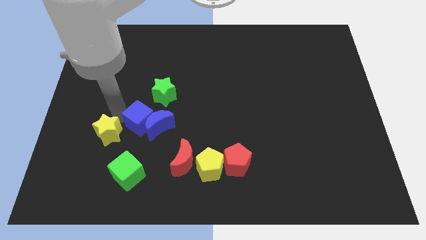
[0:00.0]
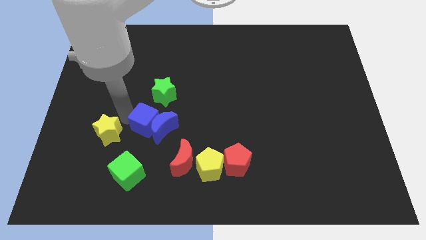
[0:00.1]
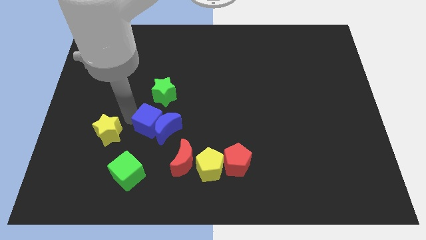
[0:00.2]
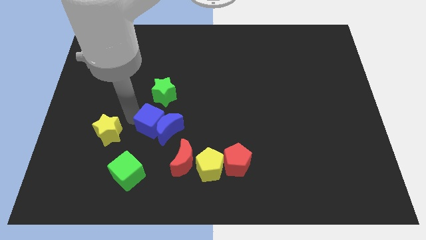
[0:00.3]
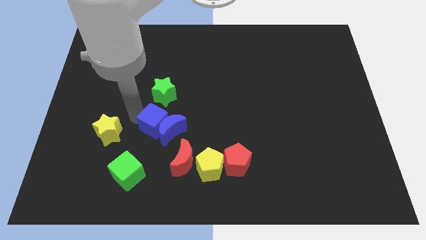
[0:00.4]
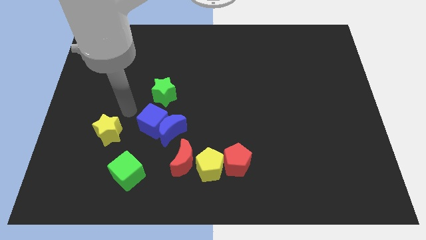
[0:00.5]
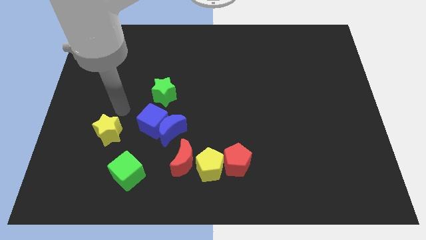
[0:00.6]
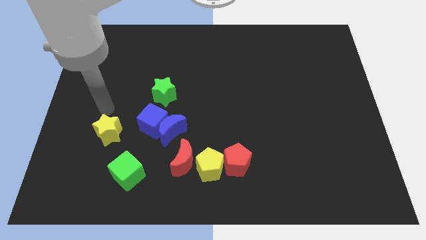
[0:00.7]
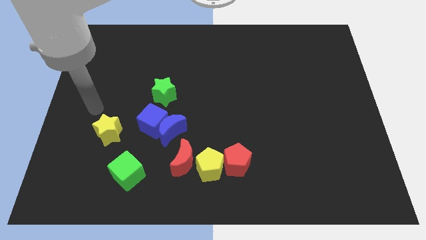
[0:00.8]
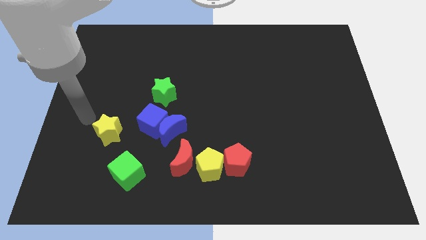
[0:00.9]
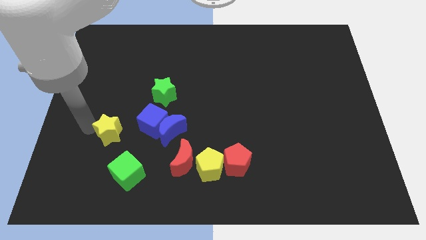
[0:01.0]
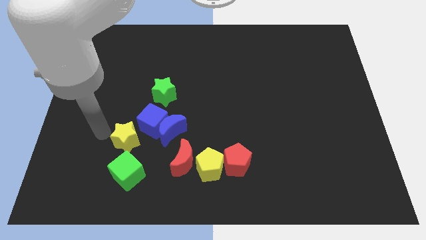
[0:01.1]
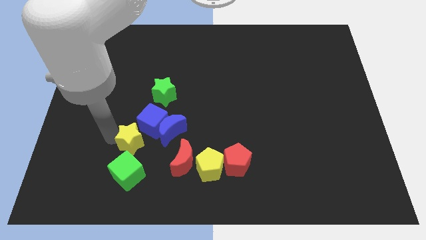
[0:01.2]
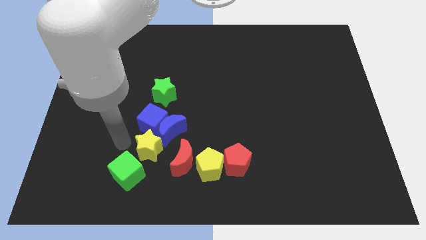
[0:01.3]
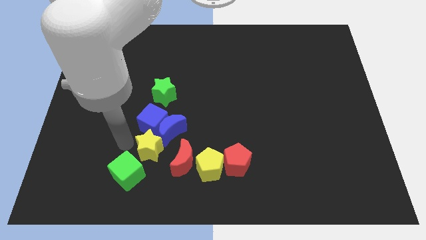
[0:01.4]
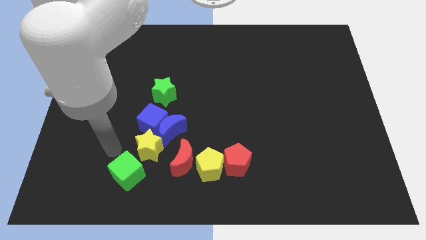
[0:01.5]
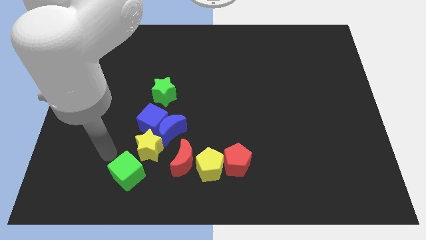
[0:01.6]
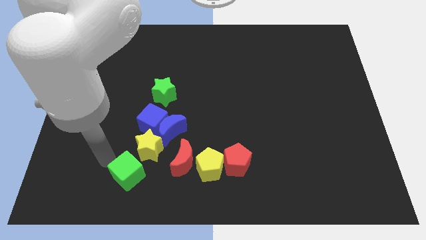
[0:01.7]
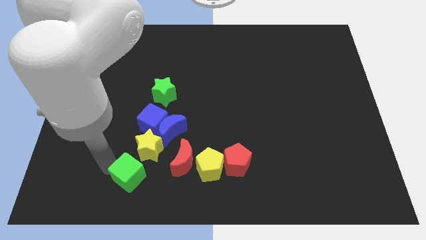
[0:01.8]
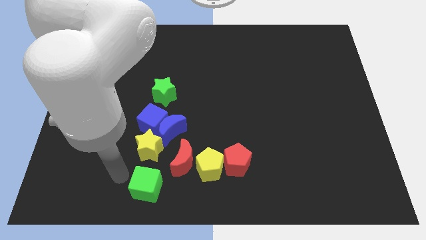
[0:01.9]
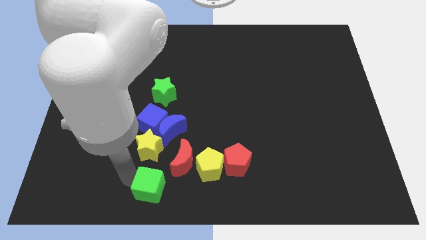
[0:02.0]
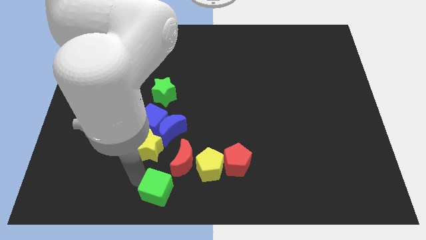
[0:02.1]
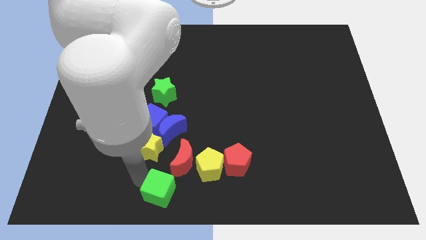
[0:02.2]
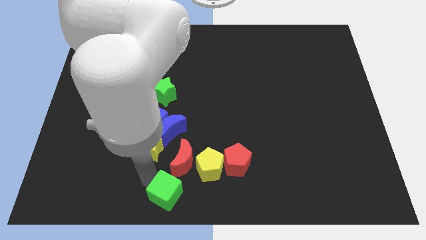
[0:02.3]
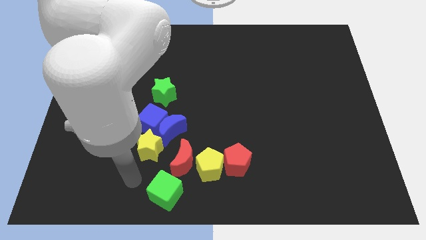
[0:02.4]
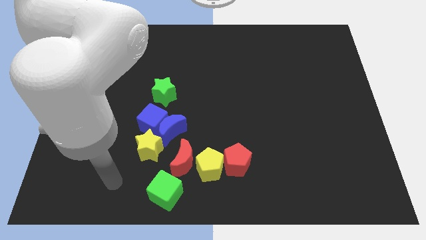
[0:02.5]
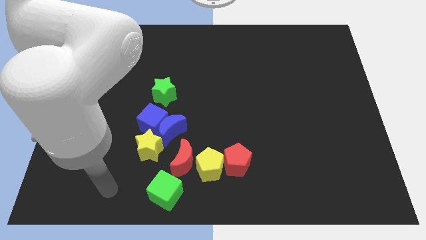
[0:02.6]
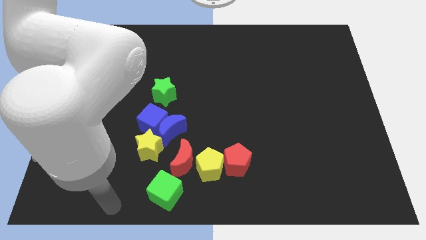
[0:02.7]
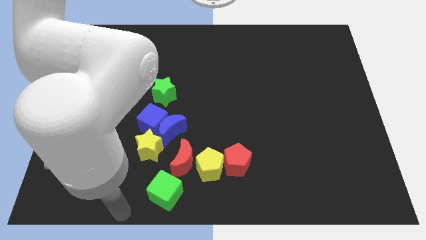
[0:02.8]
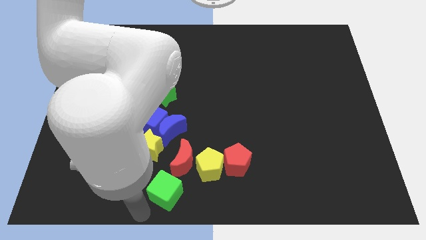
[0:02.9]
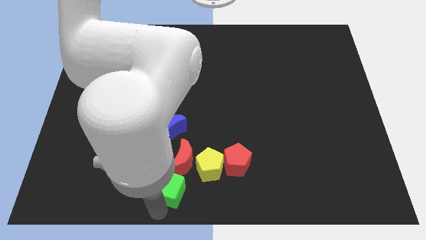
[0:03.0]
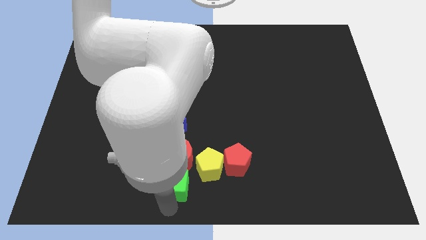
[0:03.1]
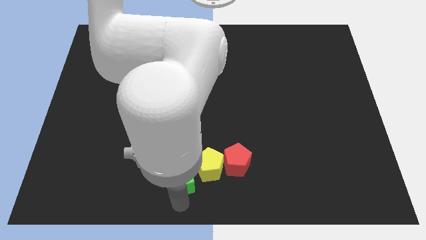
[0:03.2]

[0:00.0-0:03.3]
push the yellow star and green cube near to the red moon

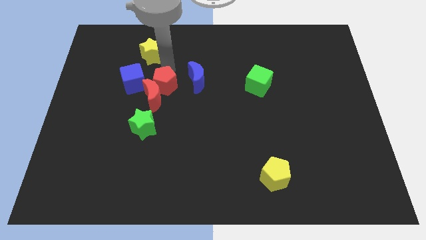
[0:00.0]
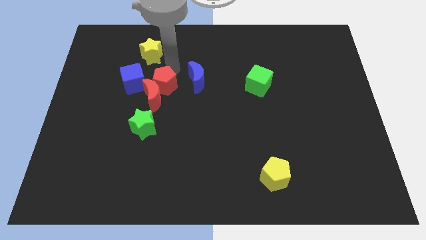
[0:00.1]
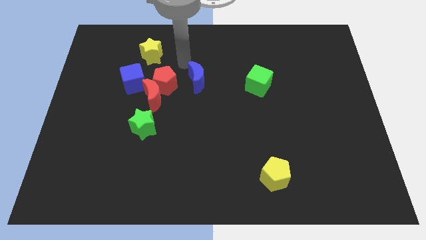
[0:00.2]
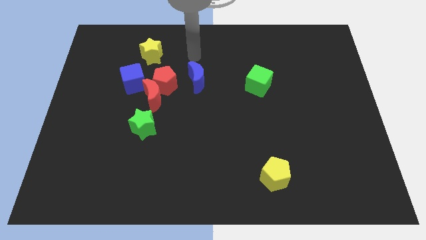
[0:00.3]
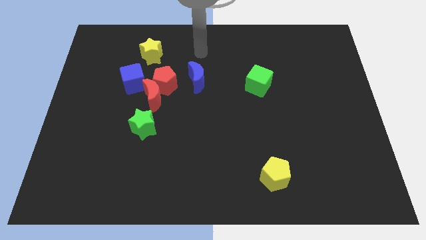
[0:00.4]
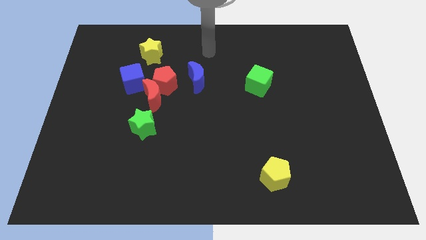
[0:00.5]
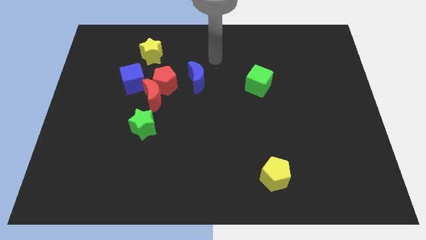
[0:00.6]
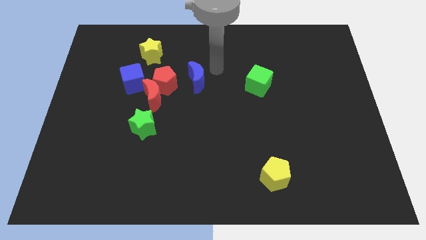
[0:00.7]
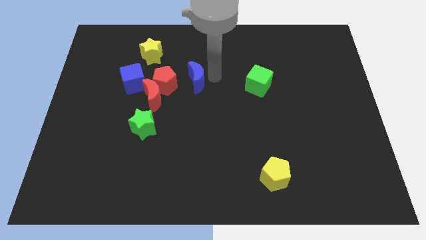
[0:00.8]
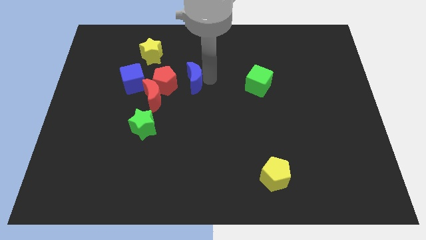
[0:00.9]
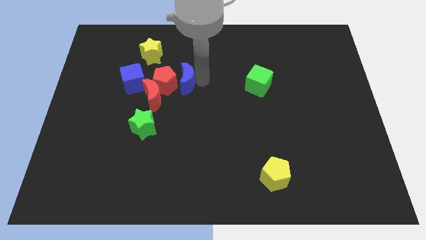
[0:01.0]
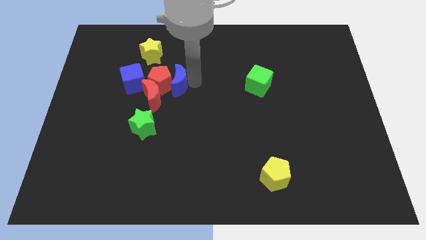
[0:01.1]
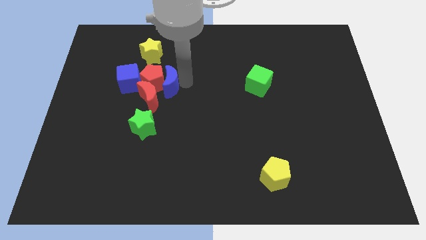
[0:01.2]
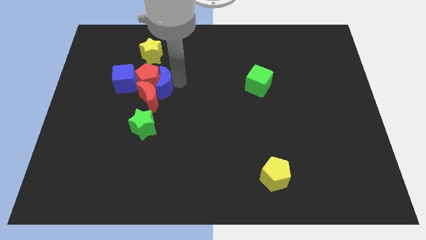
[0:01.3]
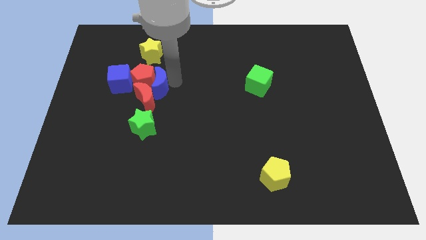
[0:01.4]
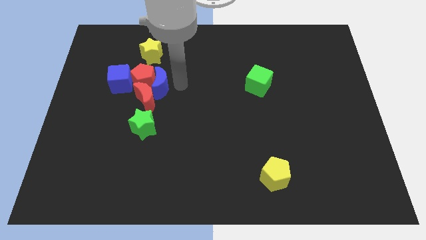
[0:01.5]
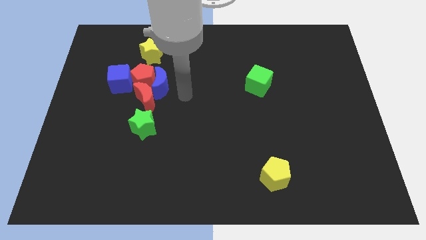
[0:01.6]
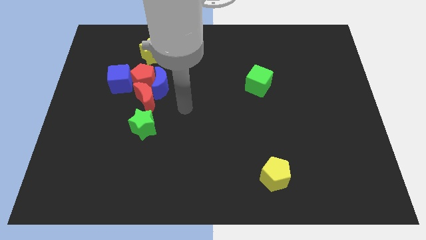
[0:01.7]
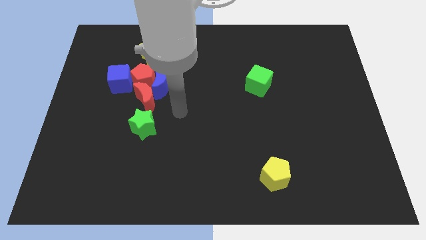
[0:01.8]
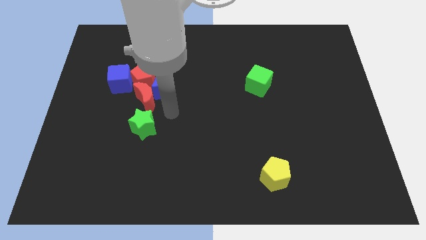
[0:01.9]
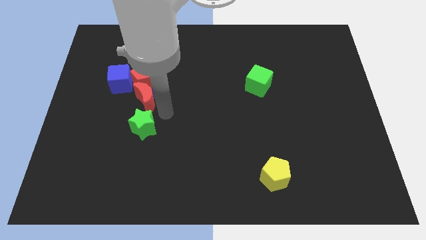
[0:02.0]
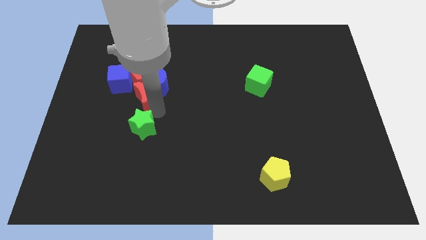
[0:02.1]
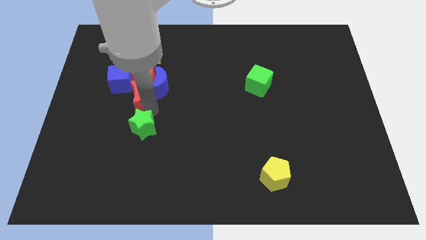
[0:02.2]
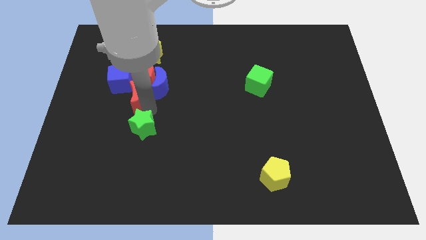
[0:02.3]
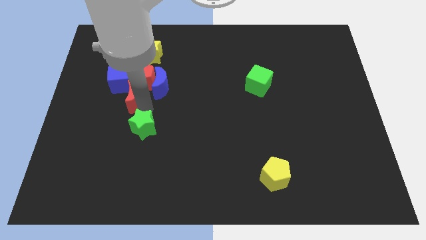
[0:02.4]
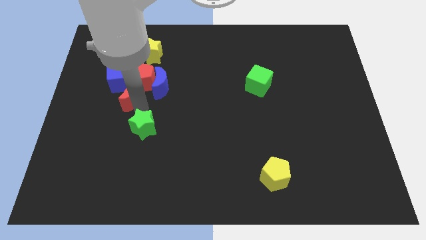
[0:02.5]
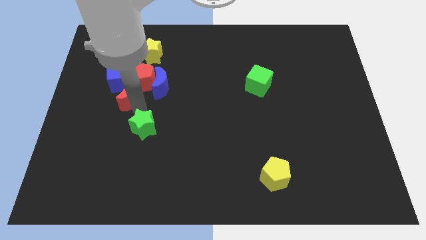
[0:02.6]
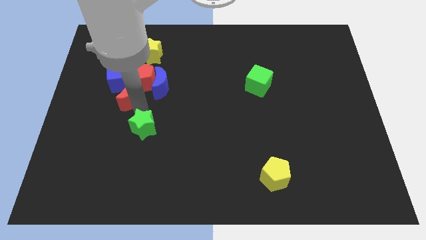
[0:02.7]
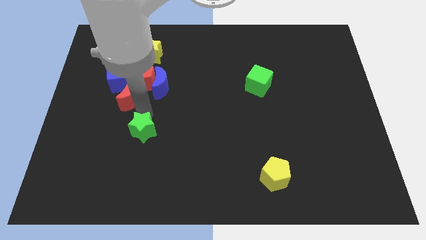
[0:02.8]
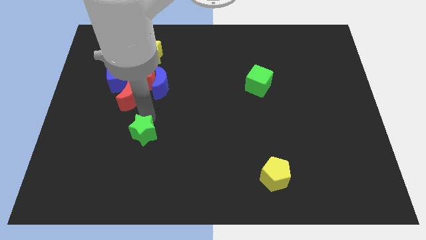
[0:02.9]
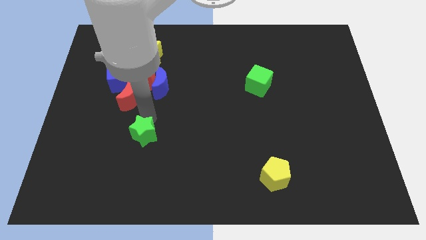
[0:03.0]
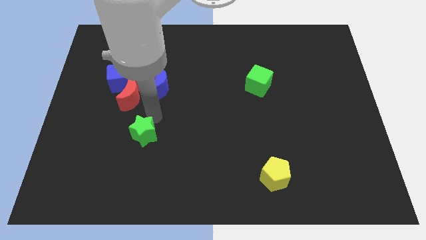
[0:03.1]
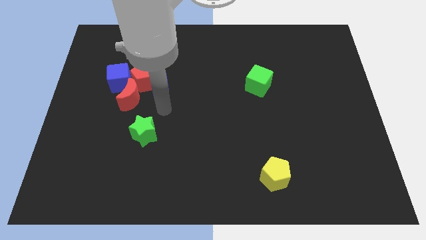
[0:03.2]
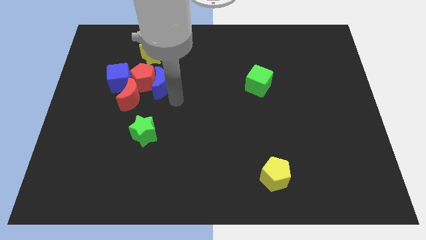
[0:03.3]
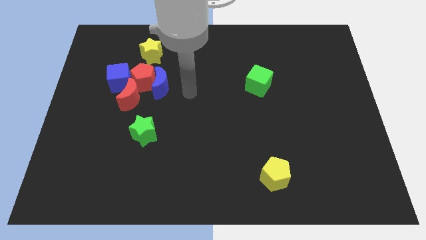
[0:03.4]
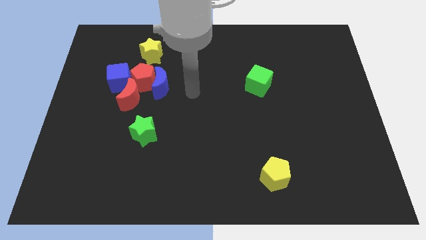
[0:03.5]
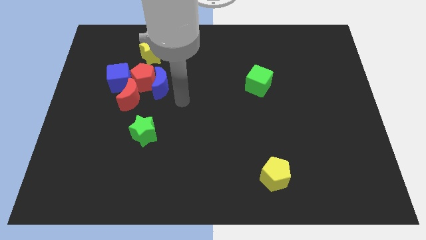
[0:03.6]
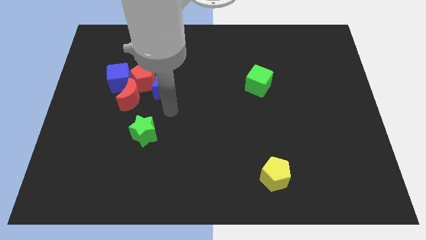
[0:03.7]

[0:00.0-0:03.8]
separate the green star and red moon

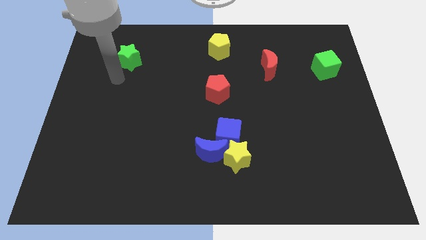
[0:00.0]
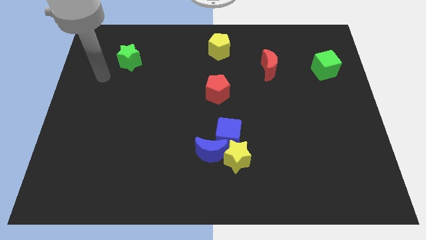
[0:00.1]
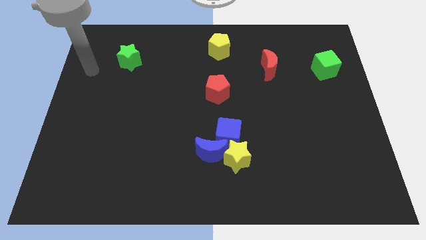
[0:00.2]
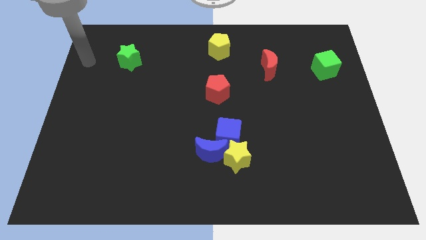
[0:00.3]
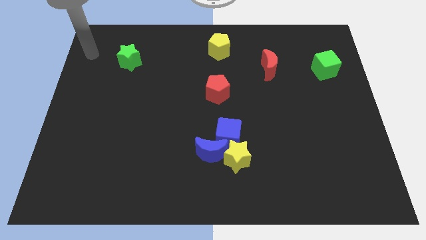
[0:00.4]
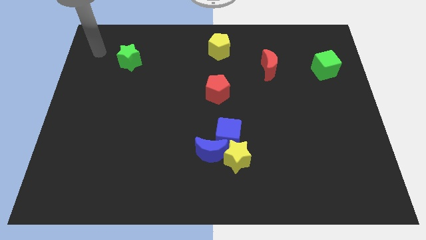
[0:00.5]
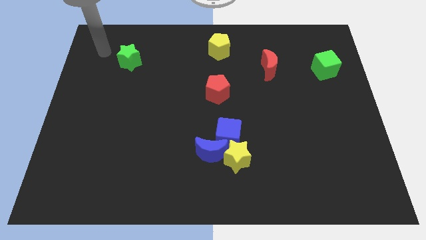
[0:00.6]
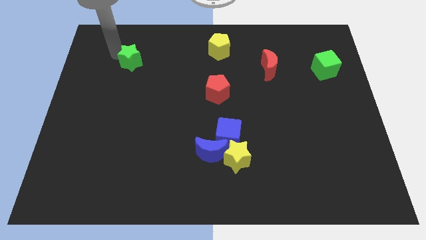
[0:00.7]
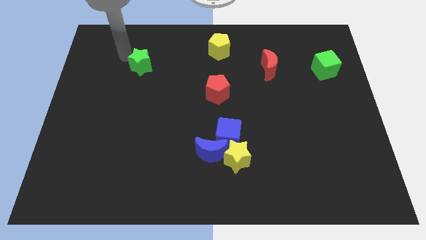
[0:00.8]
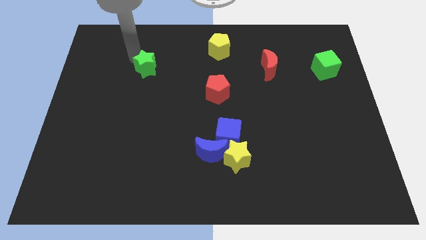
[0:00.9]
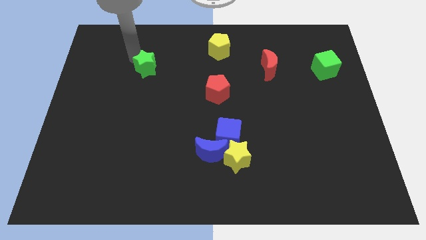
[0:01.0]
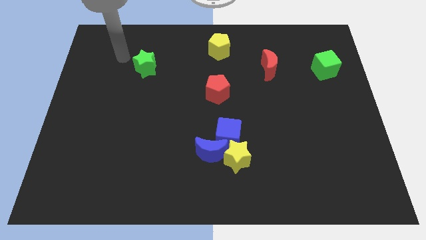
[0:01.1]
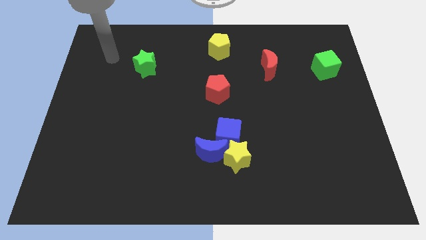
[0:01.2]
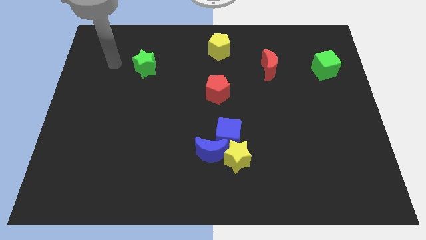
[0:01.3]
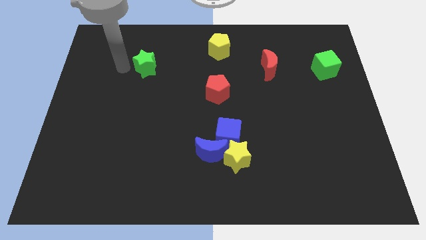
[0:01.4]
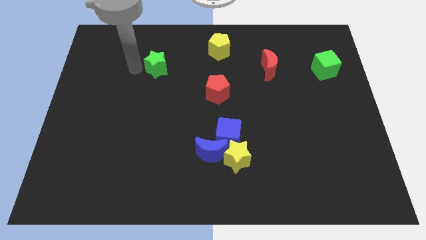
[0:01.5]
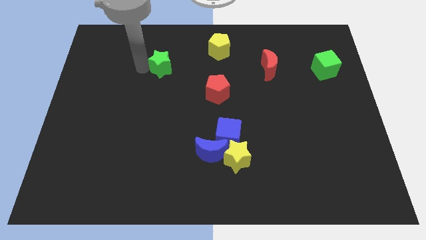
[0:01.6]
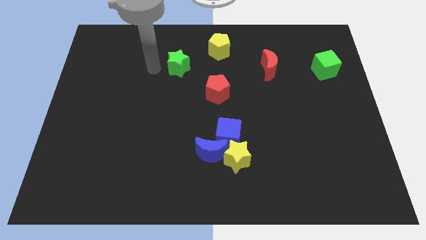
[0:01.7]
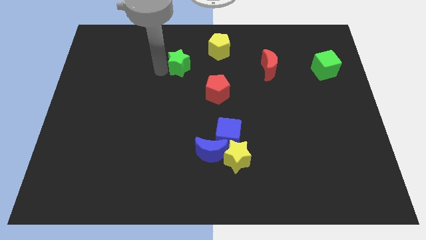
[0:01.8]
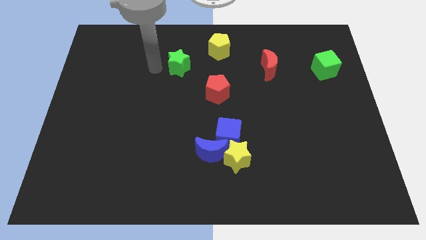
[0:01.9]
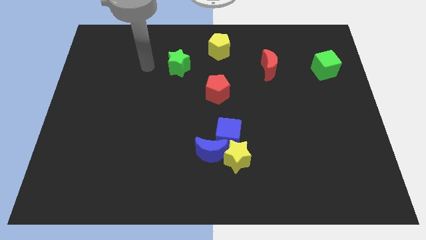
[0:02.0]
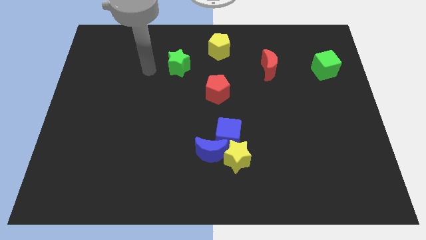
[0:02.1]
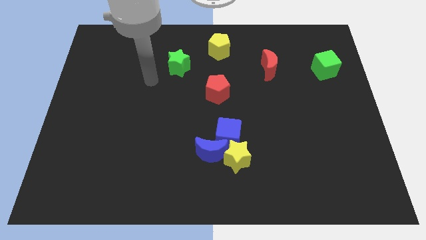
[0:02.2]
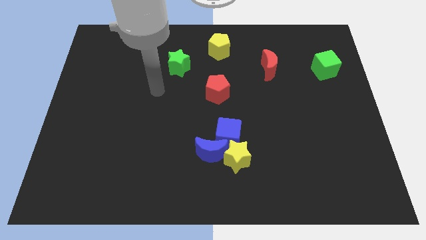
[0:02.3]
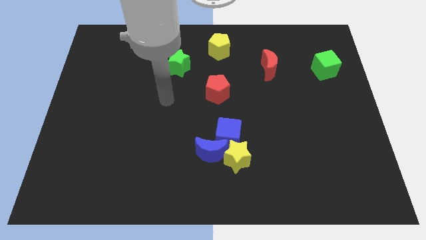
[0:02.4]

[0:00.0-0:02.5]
push the green star diagonally left to the yellow penatgon
